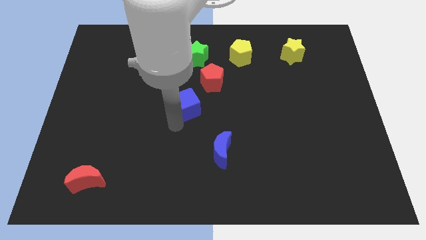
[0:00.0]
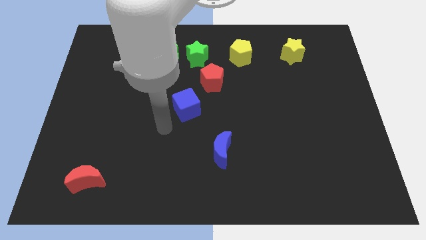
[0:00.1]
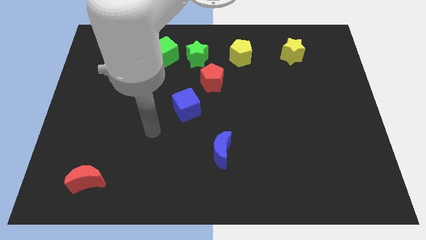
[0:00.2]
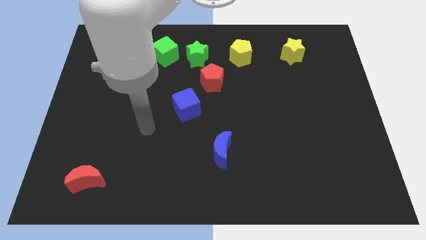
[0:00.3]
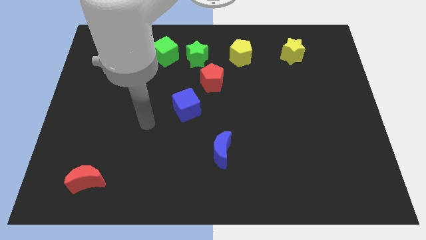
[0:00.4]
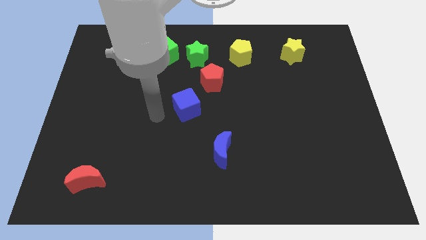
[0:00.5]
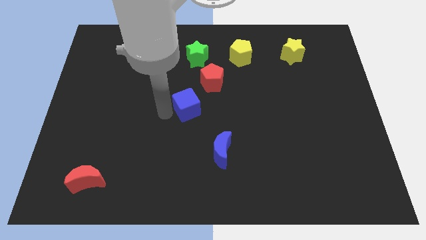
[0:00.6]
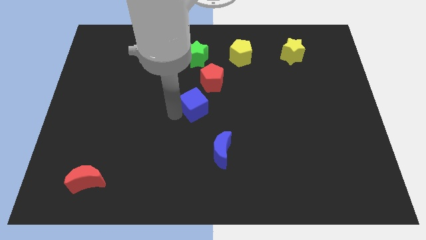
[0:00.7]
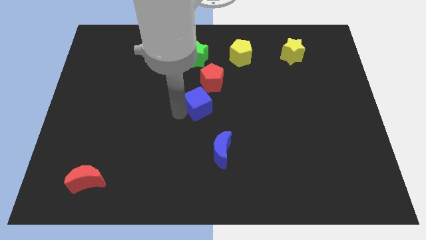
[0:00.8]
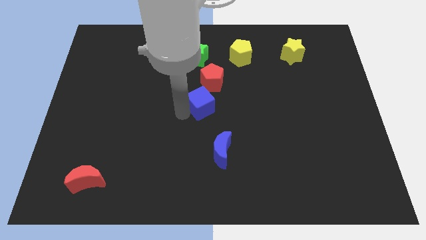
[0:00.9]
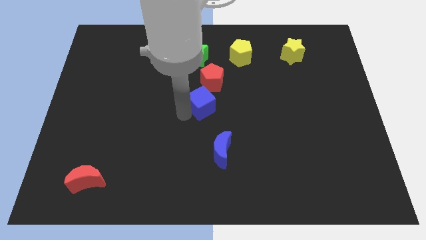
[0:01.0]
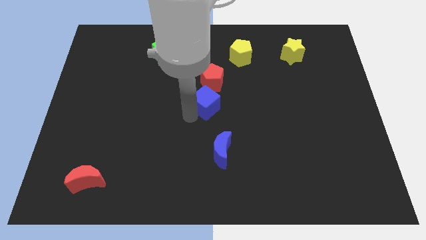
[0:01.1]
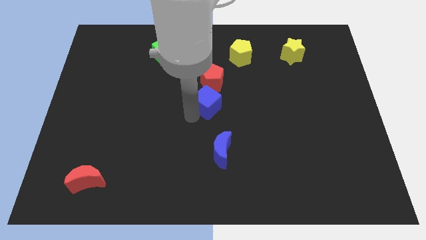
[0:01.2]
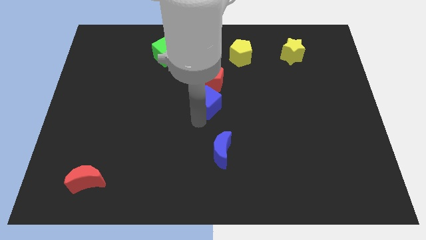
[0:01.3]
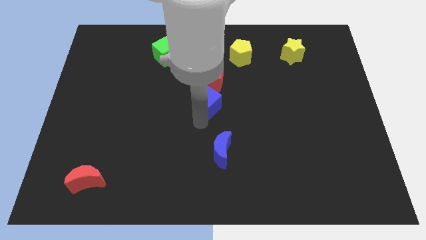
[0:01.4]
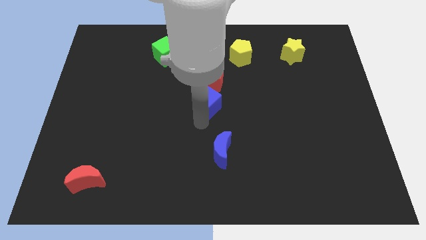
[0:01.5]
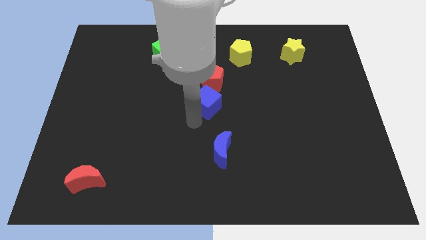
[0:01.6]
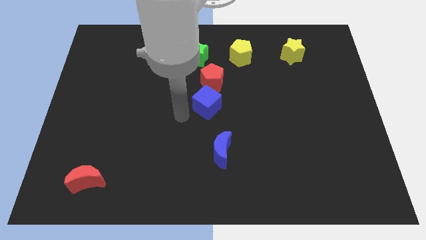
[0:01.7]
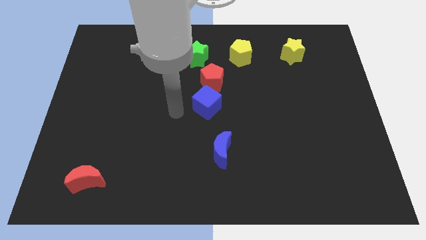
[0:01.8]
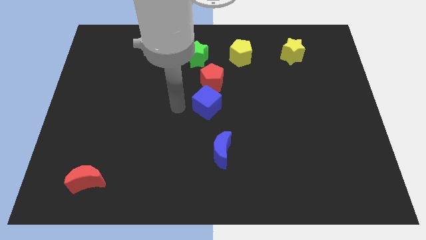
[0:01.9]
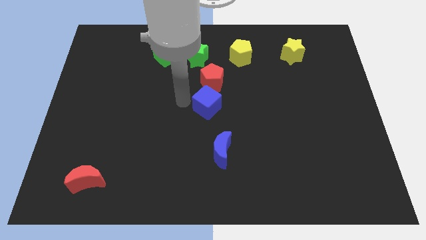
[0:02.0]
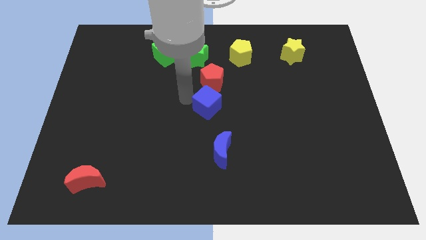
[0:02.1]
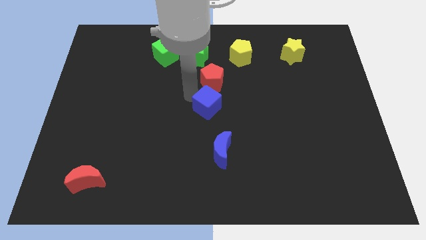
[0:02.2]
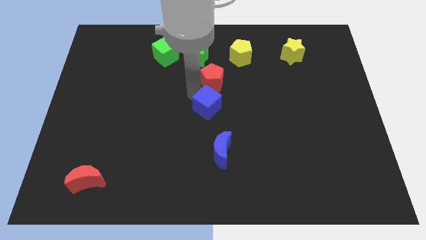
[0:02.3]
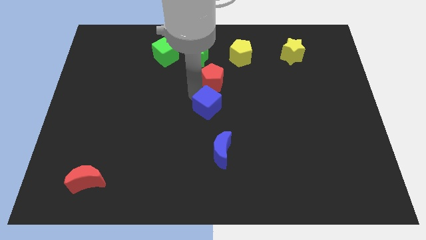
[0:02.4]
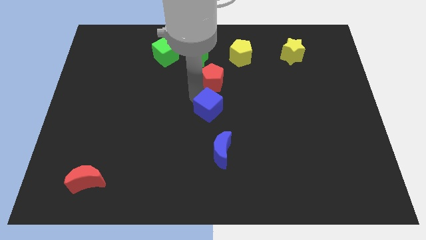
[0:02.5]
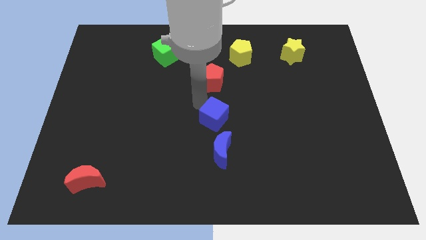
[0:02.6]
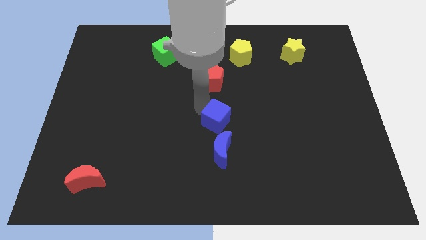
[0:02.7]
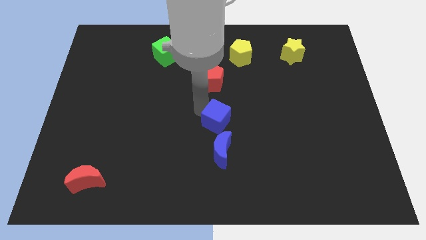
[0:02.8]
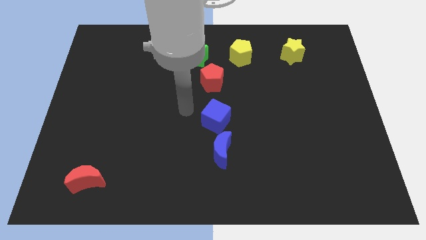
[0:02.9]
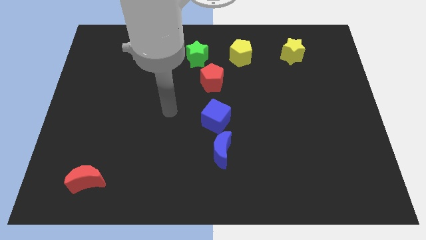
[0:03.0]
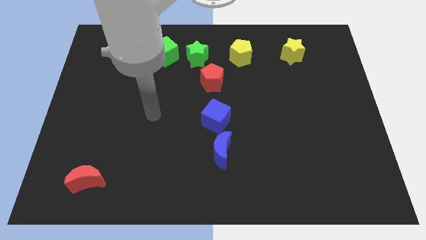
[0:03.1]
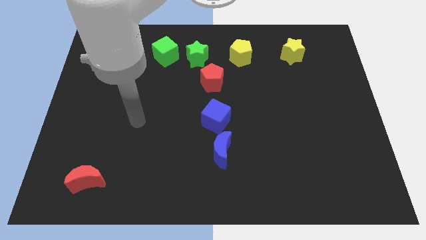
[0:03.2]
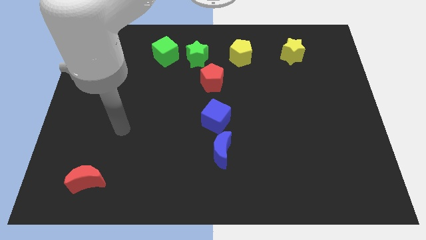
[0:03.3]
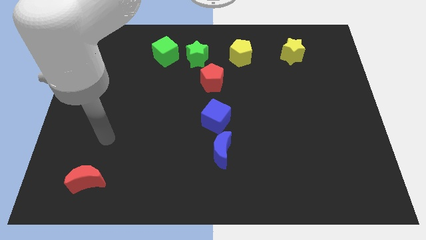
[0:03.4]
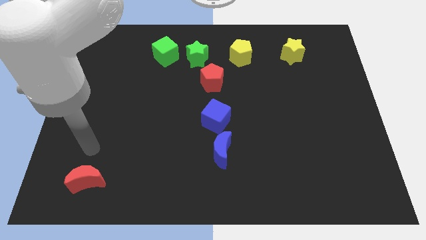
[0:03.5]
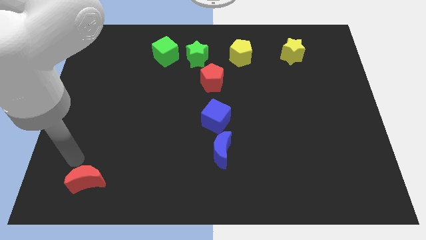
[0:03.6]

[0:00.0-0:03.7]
move the blue cube to the bottom of the red pentagon

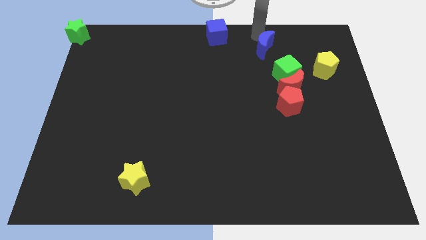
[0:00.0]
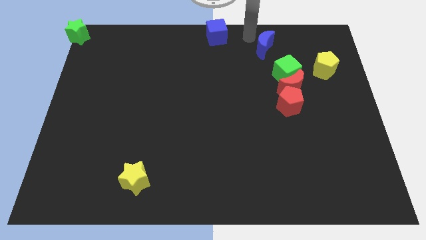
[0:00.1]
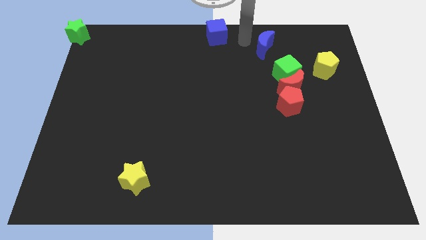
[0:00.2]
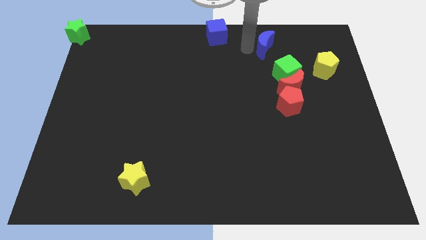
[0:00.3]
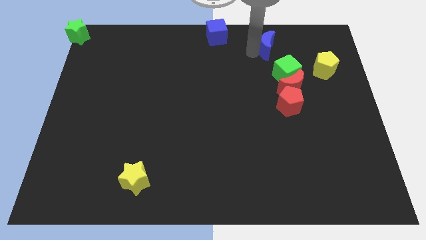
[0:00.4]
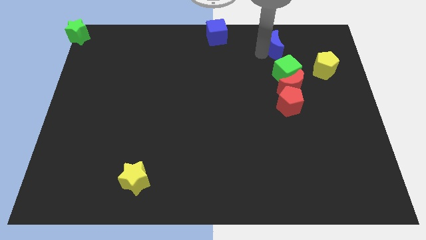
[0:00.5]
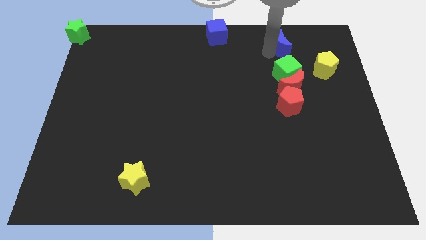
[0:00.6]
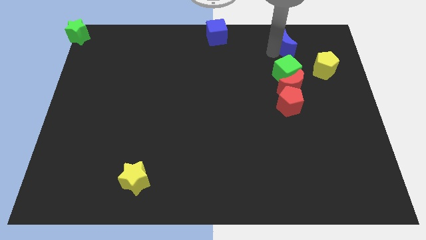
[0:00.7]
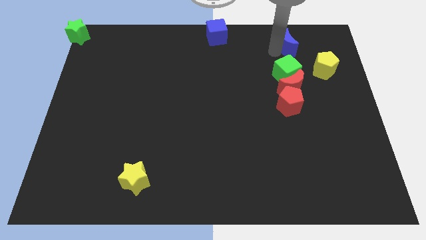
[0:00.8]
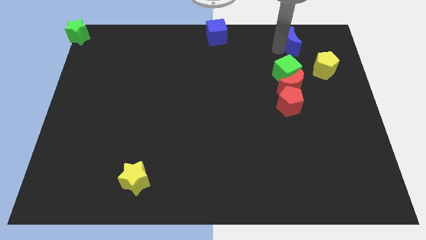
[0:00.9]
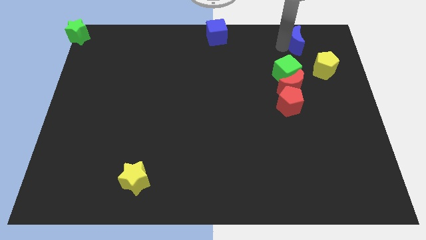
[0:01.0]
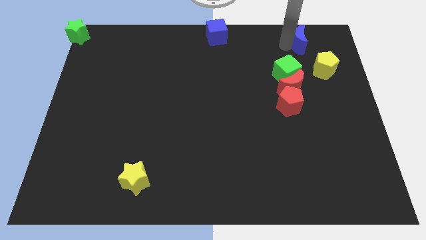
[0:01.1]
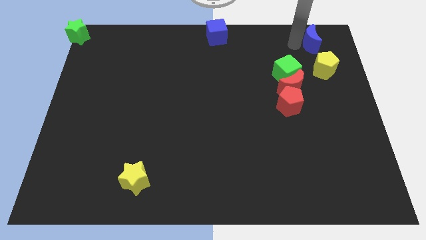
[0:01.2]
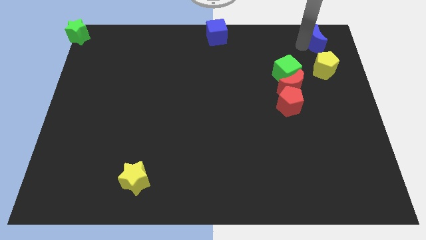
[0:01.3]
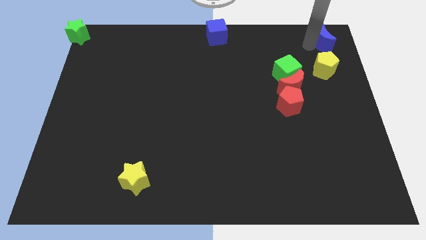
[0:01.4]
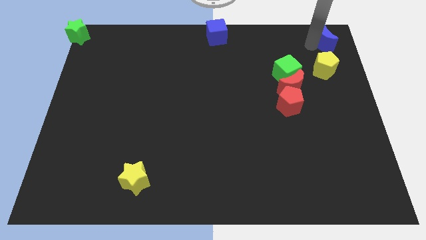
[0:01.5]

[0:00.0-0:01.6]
push the blue crescent to the top of the yellow pentagon

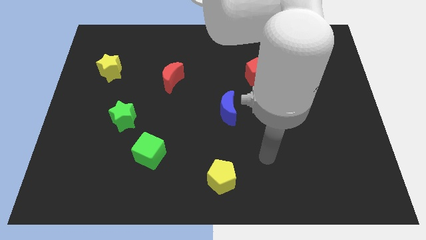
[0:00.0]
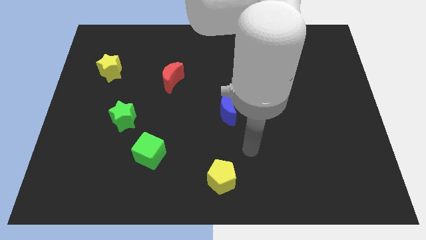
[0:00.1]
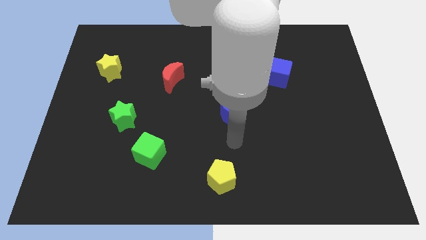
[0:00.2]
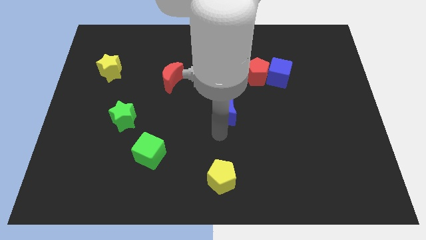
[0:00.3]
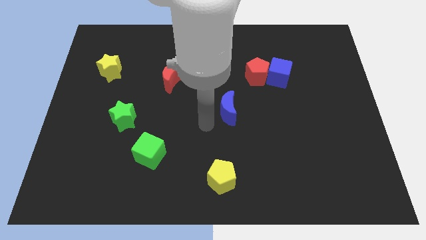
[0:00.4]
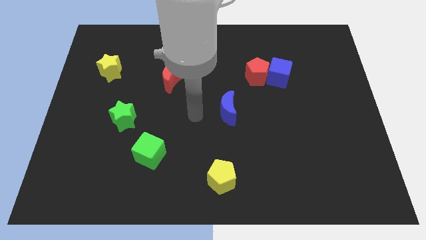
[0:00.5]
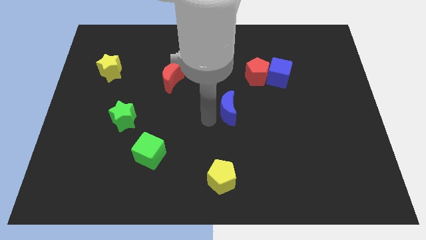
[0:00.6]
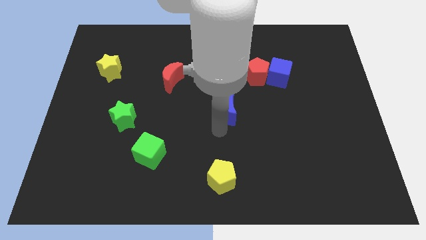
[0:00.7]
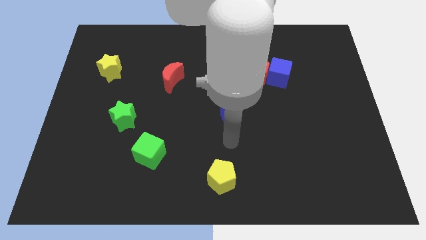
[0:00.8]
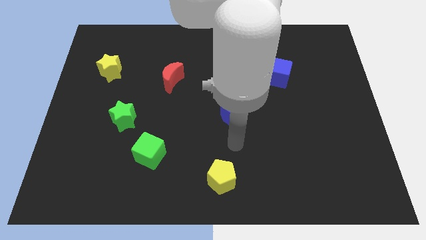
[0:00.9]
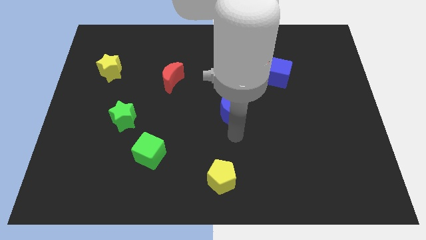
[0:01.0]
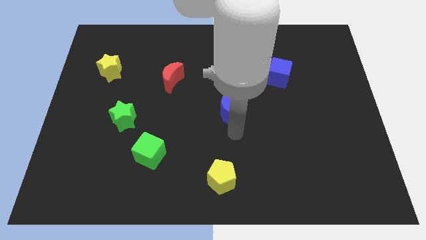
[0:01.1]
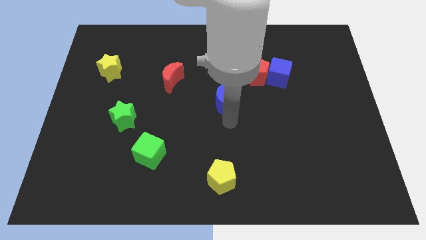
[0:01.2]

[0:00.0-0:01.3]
move the arm towards the blue crescent

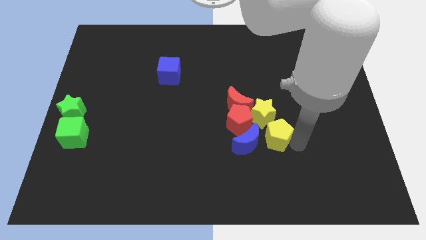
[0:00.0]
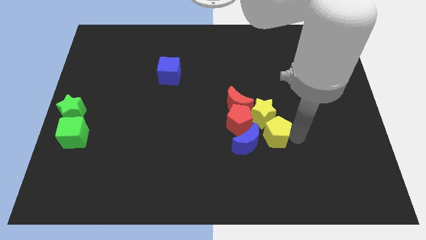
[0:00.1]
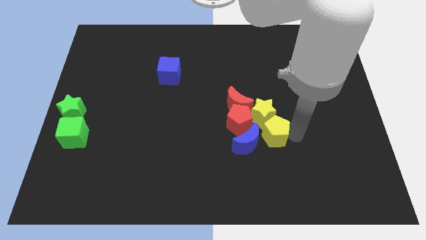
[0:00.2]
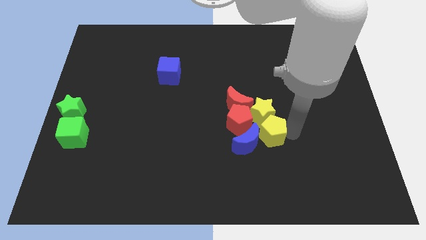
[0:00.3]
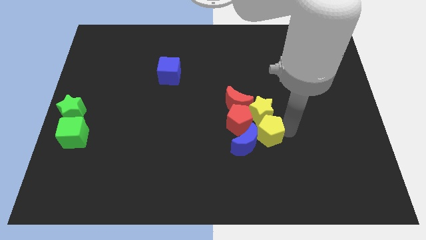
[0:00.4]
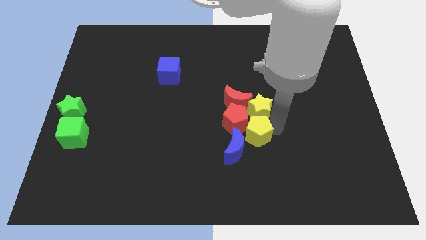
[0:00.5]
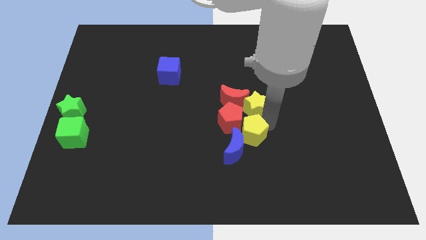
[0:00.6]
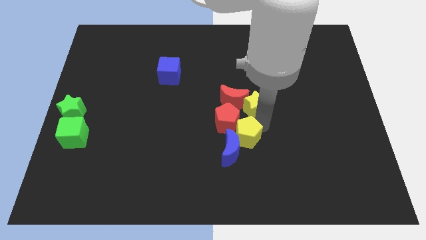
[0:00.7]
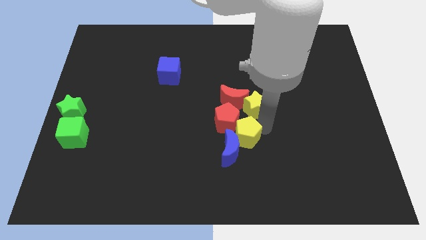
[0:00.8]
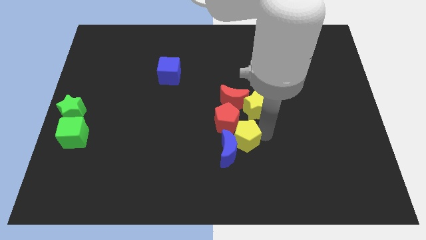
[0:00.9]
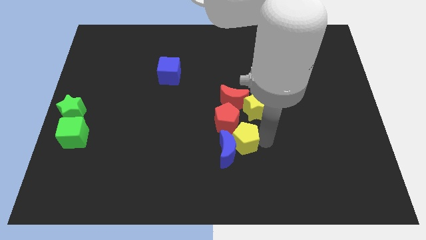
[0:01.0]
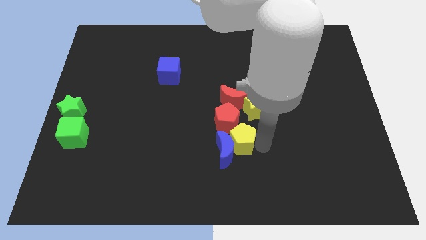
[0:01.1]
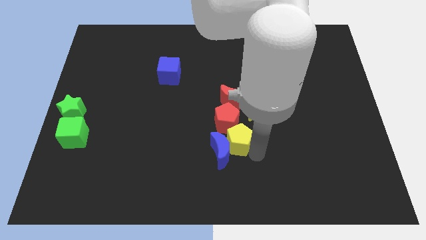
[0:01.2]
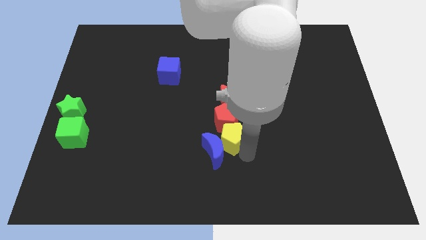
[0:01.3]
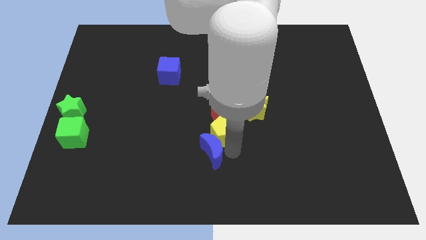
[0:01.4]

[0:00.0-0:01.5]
push the yellow pentagon to the bottom of the red pentagon

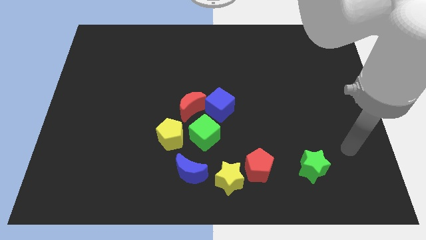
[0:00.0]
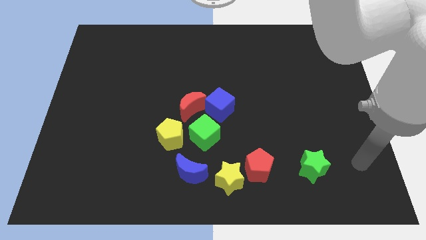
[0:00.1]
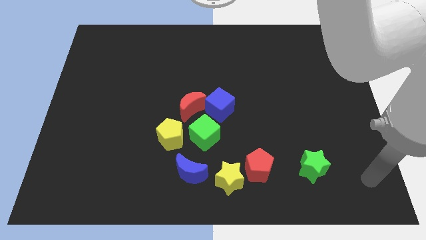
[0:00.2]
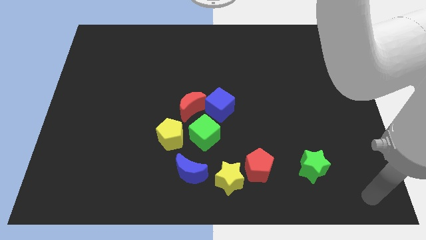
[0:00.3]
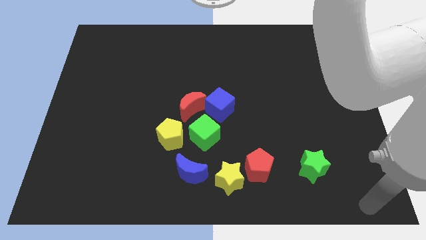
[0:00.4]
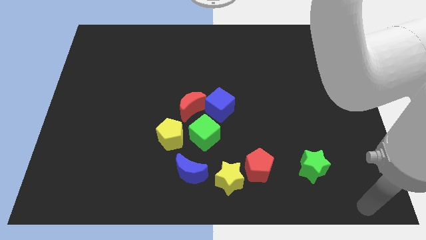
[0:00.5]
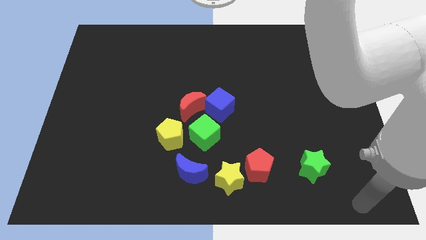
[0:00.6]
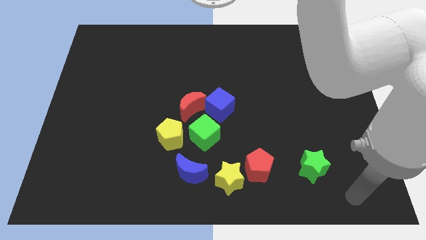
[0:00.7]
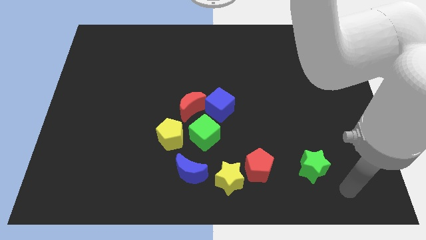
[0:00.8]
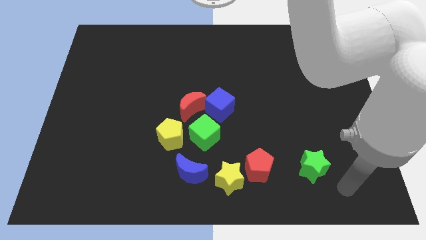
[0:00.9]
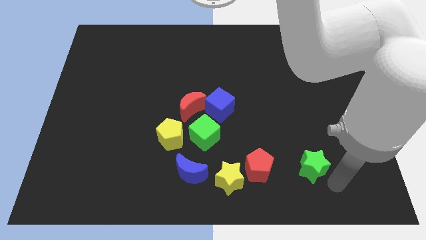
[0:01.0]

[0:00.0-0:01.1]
move your arm towards the green star
